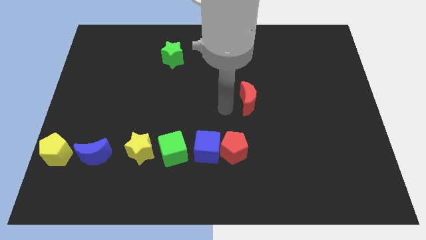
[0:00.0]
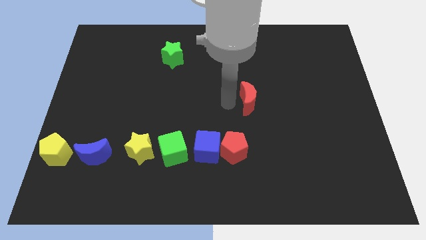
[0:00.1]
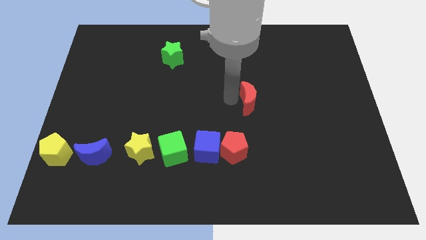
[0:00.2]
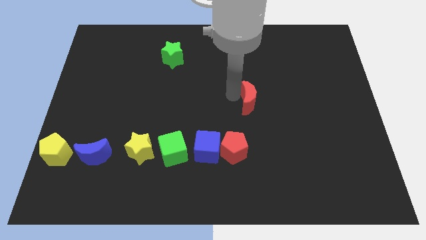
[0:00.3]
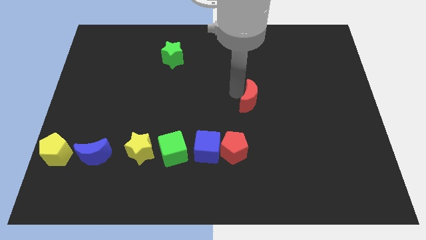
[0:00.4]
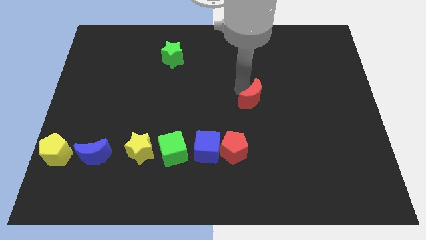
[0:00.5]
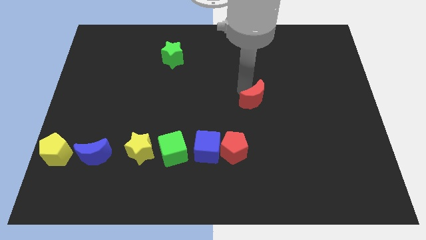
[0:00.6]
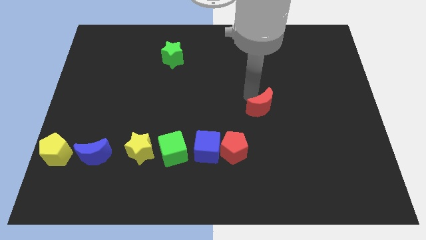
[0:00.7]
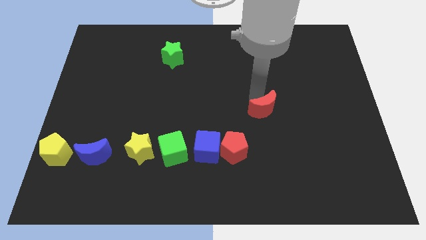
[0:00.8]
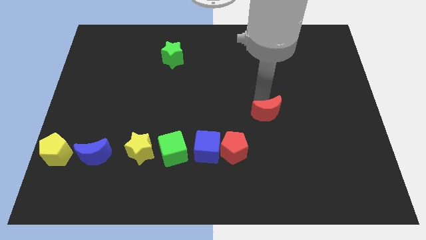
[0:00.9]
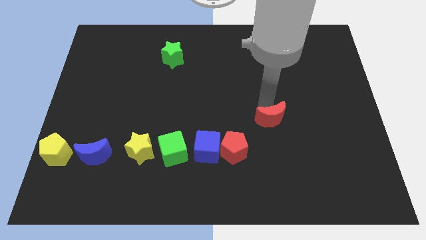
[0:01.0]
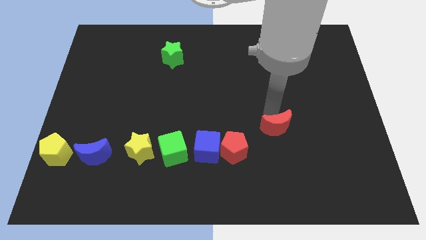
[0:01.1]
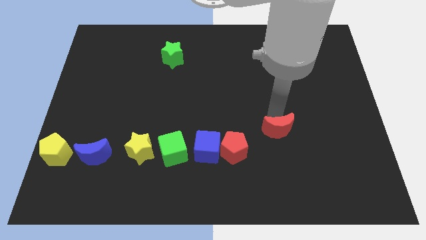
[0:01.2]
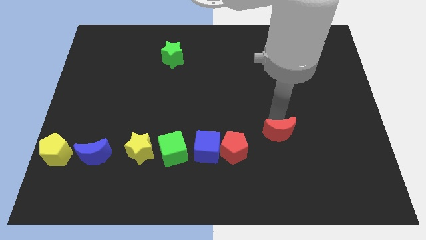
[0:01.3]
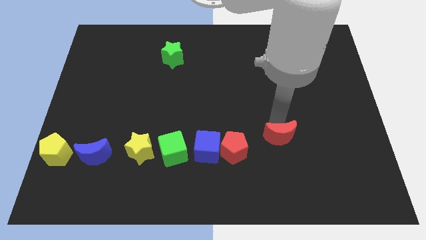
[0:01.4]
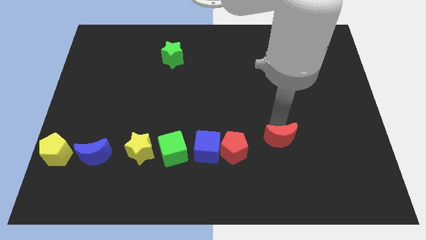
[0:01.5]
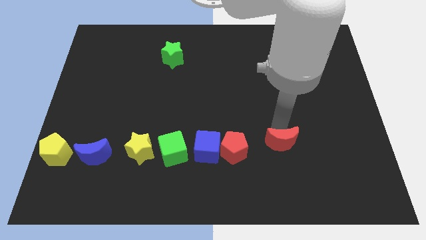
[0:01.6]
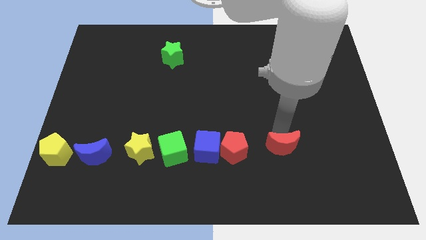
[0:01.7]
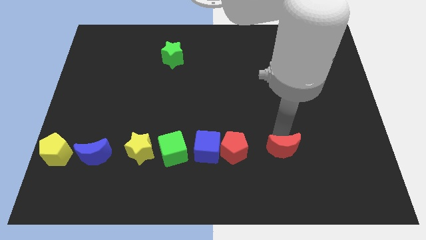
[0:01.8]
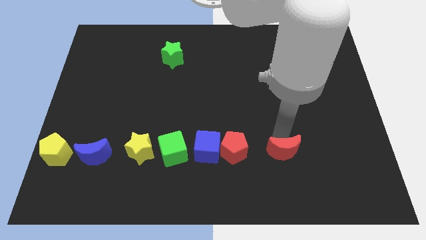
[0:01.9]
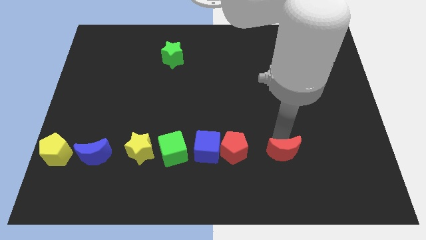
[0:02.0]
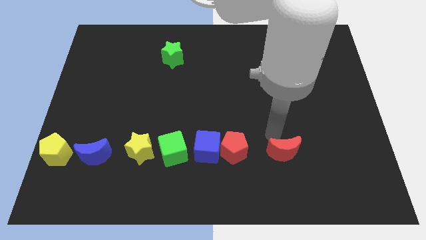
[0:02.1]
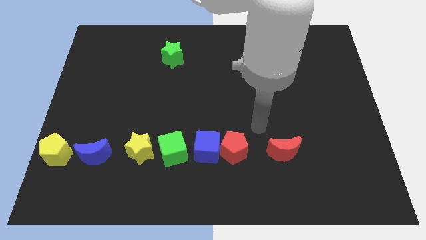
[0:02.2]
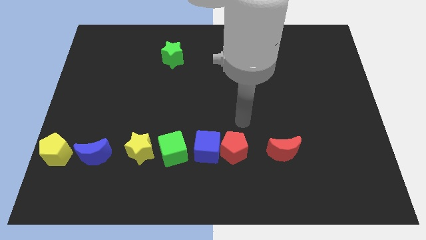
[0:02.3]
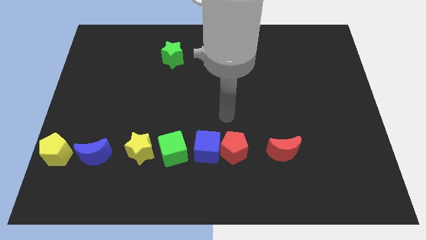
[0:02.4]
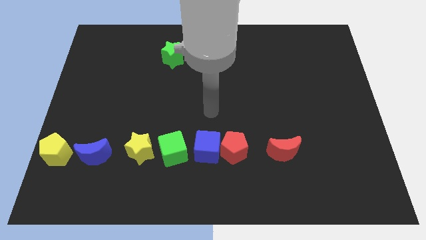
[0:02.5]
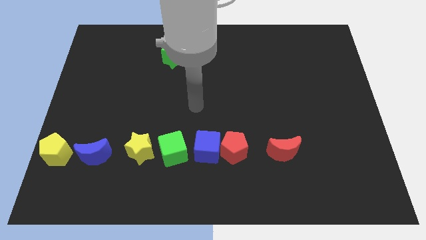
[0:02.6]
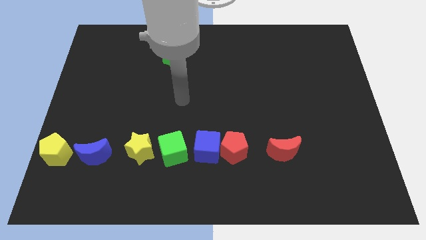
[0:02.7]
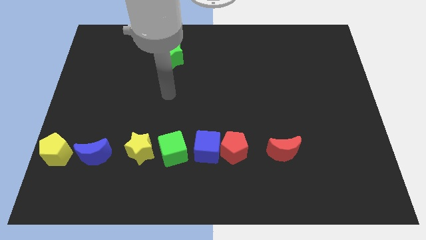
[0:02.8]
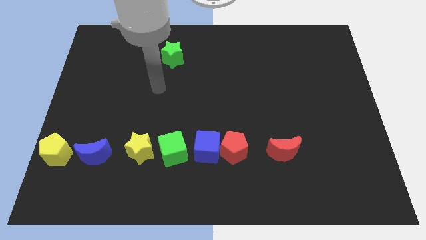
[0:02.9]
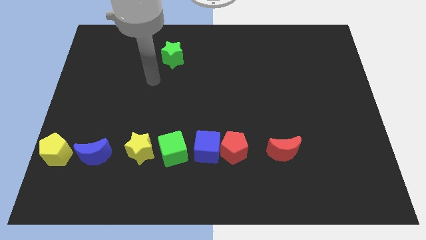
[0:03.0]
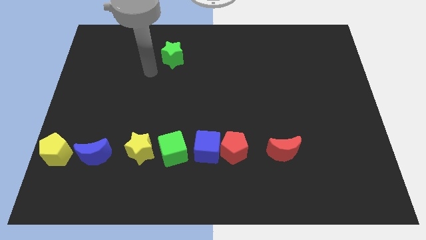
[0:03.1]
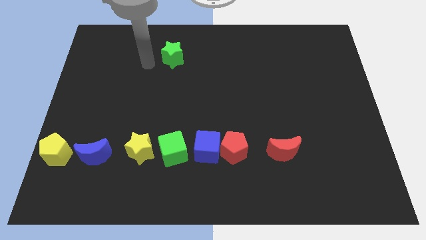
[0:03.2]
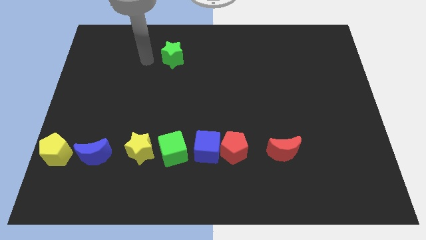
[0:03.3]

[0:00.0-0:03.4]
move the red moon to the right of the red pentagon

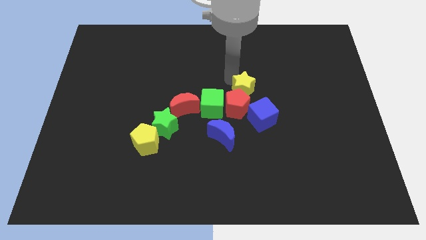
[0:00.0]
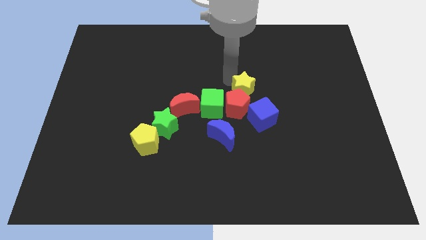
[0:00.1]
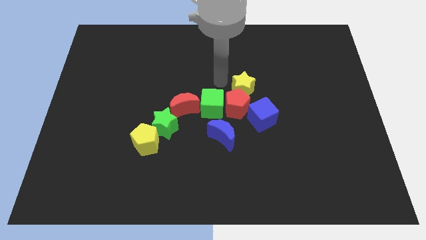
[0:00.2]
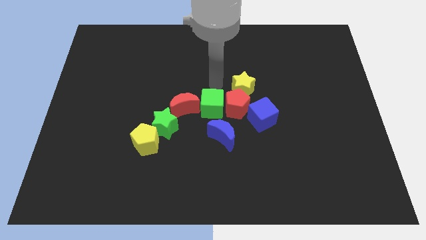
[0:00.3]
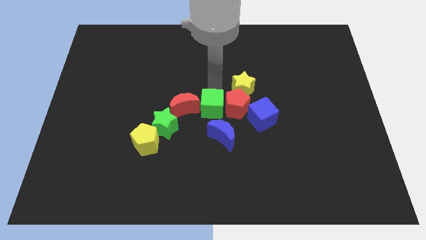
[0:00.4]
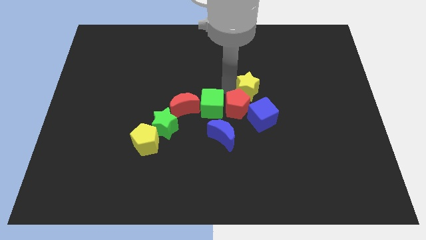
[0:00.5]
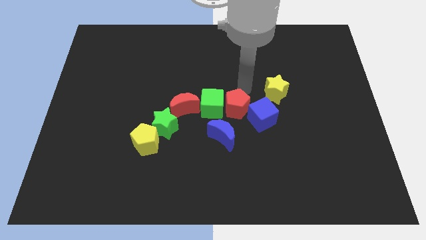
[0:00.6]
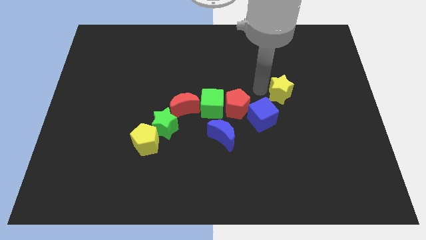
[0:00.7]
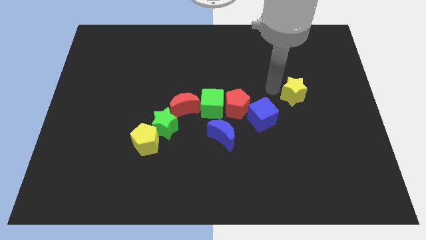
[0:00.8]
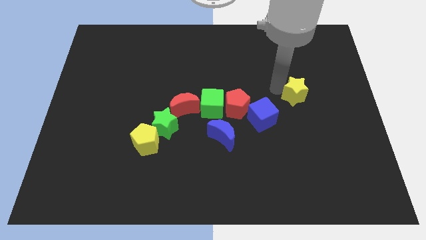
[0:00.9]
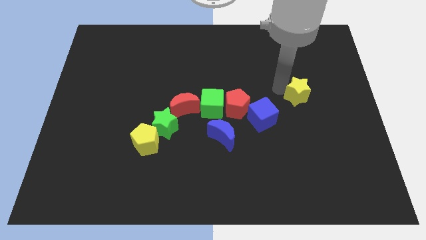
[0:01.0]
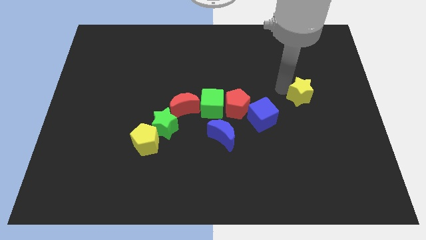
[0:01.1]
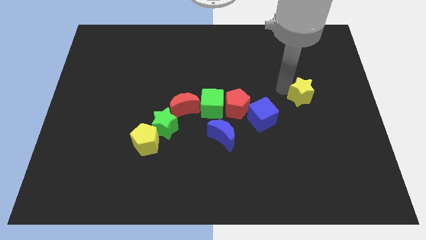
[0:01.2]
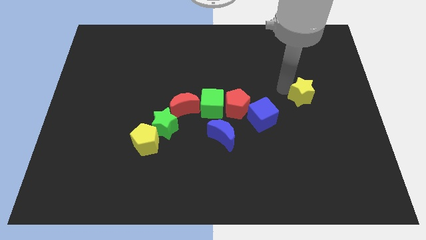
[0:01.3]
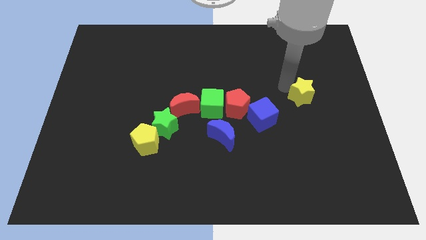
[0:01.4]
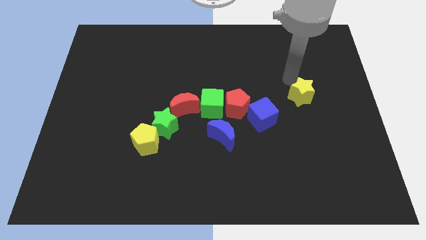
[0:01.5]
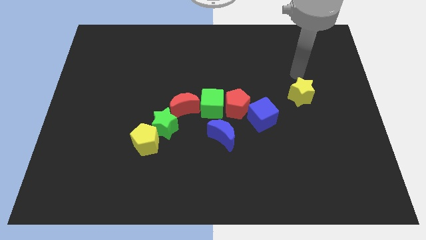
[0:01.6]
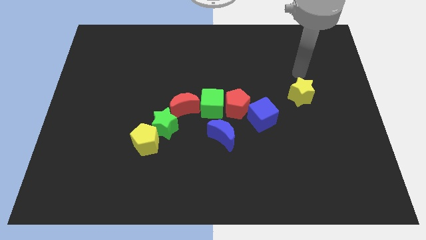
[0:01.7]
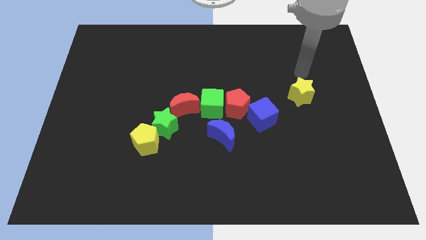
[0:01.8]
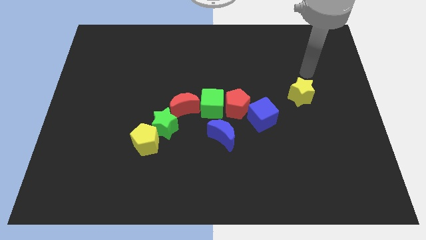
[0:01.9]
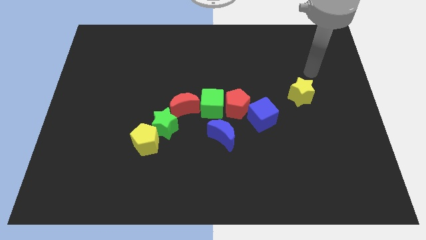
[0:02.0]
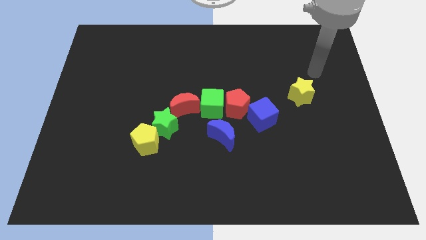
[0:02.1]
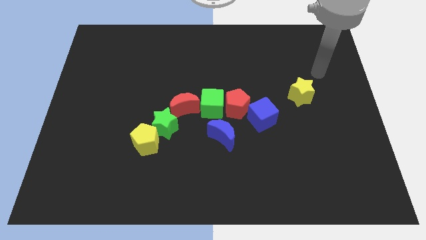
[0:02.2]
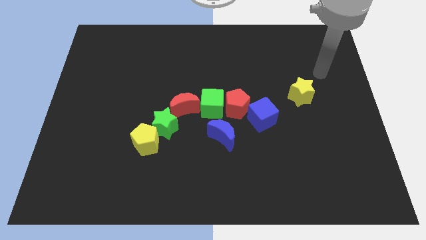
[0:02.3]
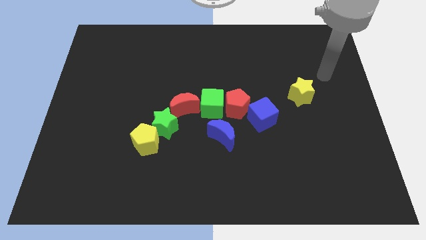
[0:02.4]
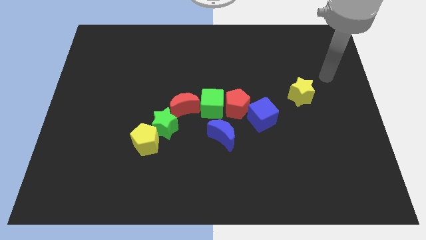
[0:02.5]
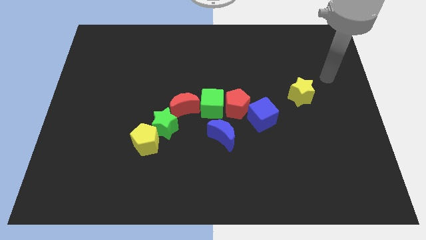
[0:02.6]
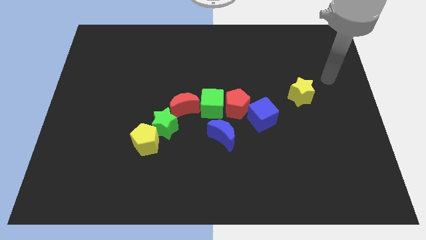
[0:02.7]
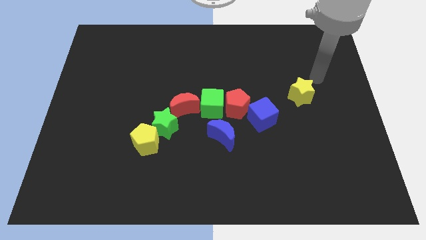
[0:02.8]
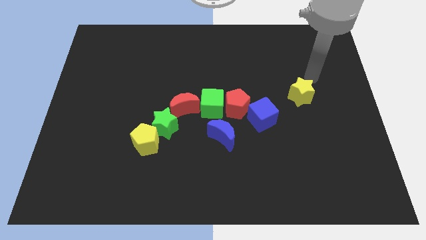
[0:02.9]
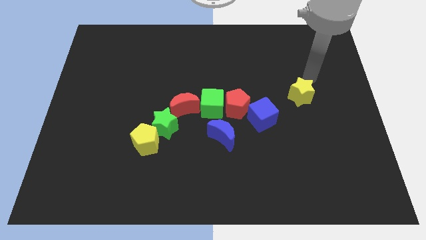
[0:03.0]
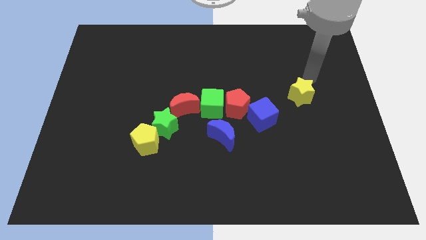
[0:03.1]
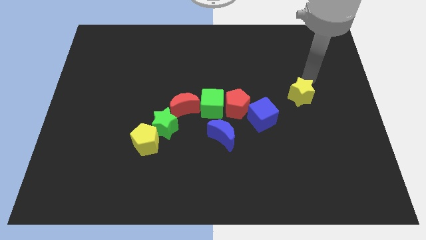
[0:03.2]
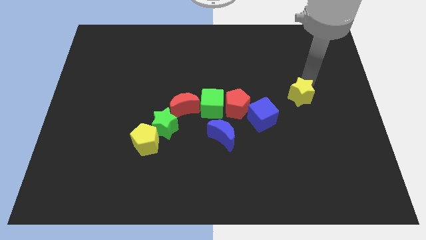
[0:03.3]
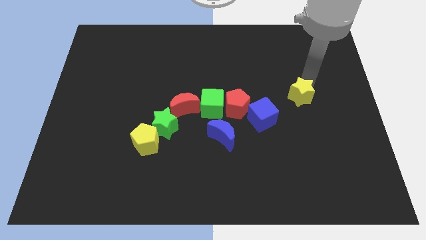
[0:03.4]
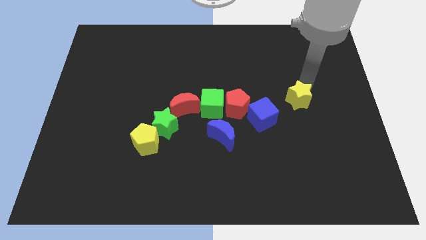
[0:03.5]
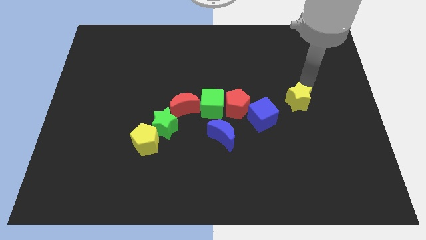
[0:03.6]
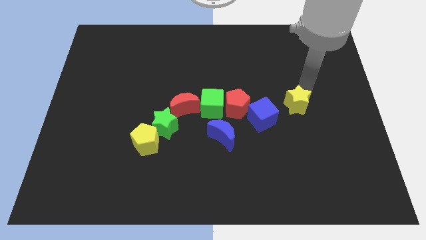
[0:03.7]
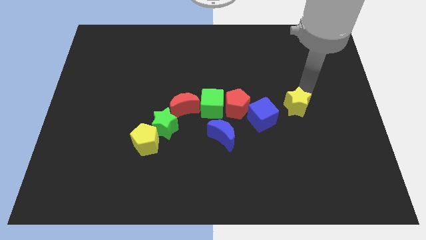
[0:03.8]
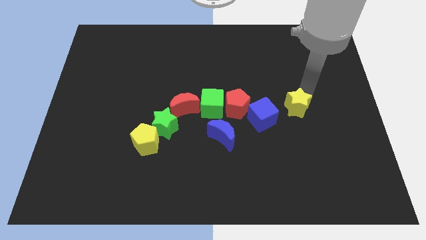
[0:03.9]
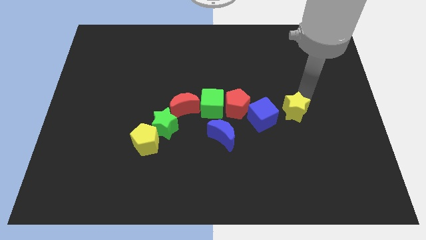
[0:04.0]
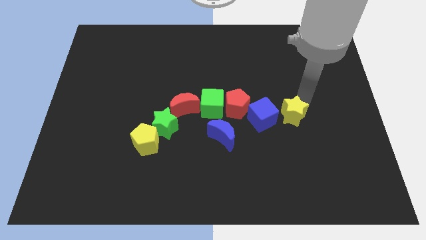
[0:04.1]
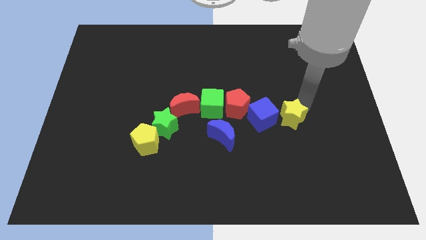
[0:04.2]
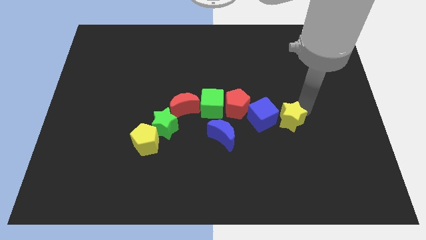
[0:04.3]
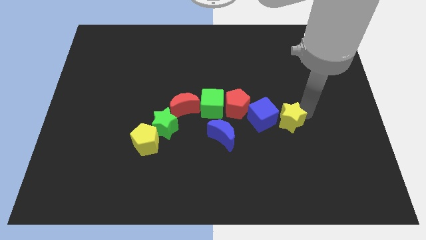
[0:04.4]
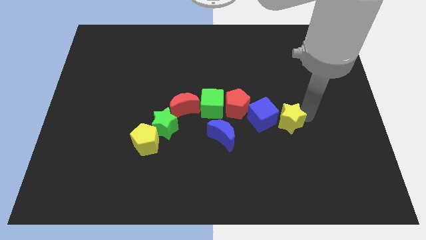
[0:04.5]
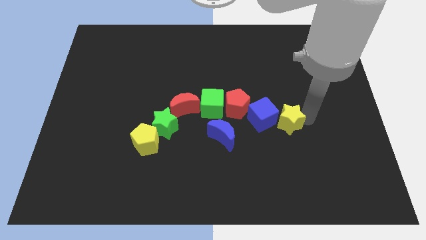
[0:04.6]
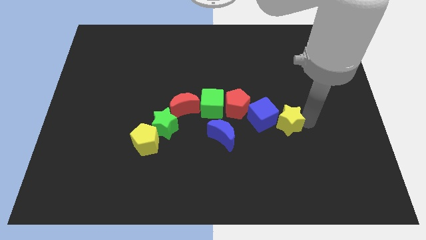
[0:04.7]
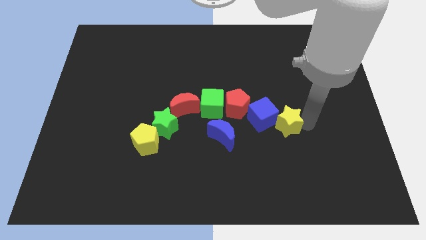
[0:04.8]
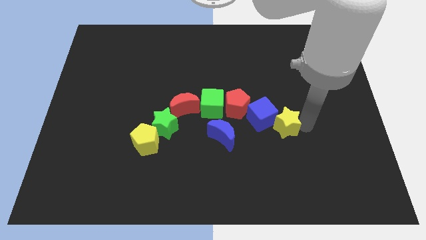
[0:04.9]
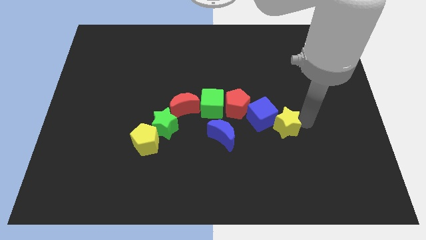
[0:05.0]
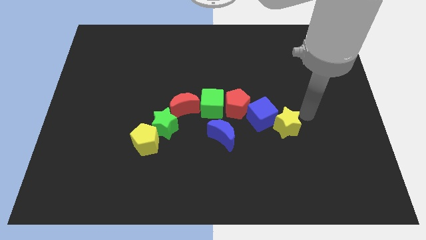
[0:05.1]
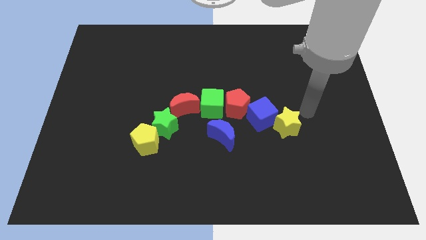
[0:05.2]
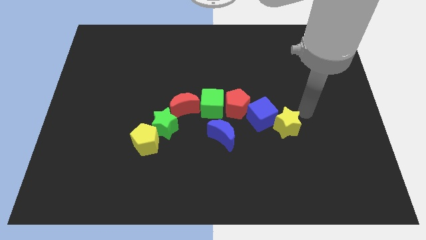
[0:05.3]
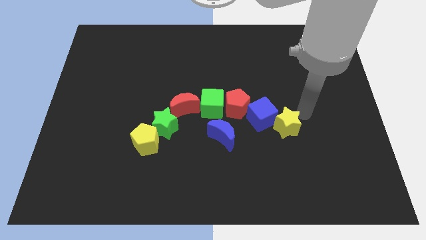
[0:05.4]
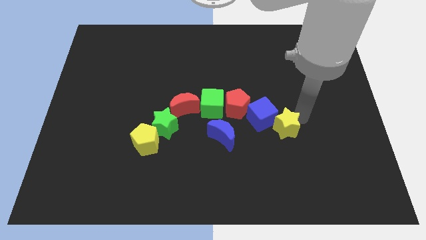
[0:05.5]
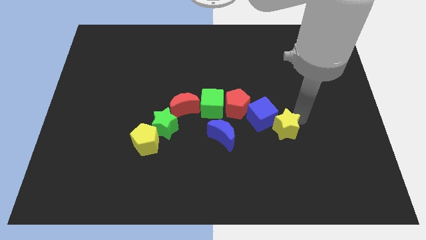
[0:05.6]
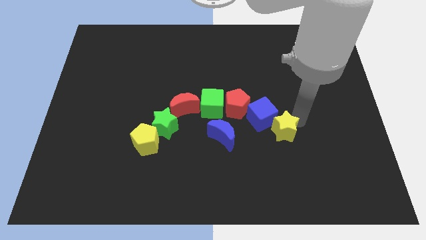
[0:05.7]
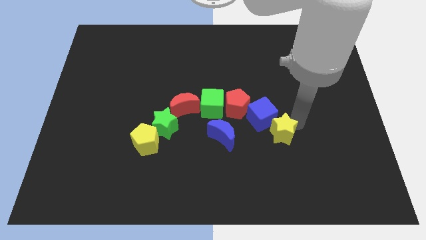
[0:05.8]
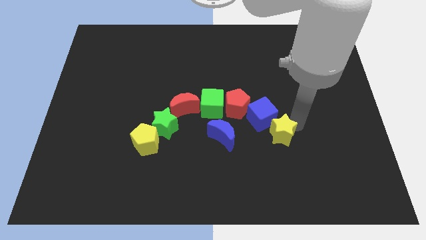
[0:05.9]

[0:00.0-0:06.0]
push the yellow star to the bottom of the blue cube
